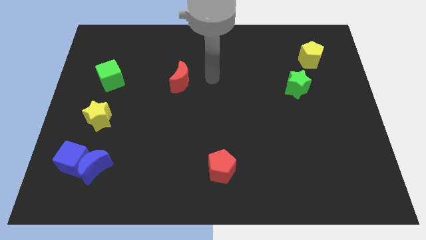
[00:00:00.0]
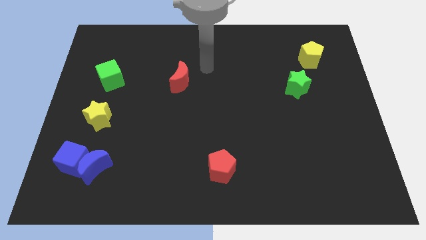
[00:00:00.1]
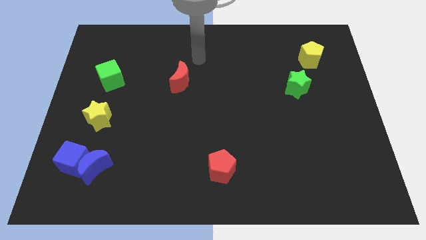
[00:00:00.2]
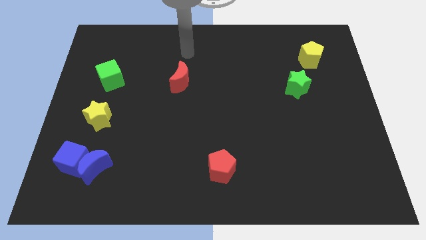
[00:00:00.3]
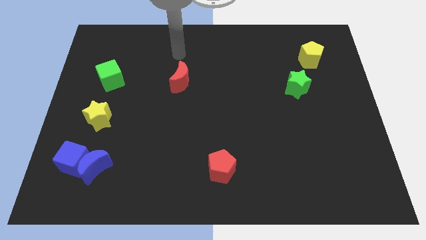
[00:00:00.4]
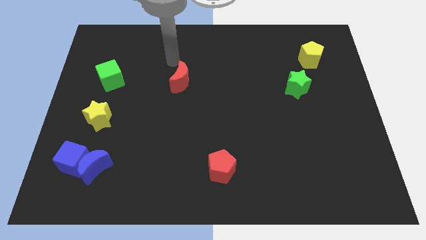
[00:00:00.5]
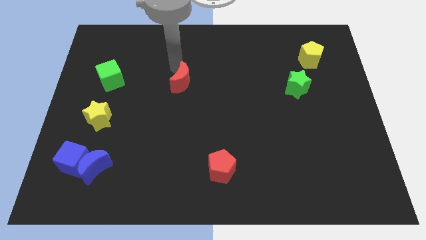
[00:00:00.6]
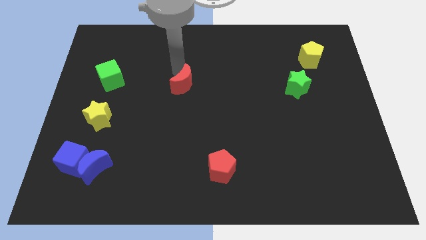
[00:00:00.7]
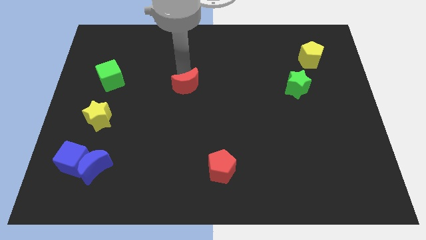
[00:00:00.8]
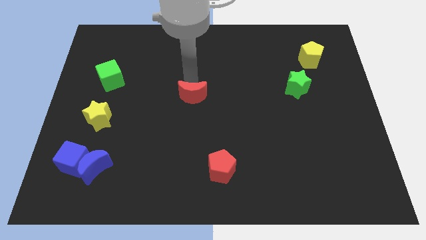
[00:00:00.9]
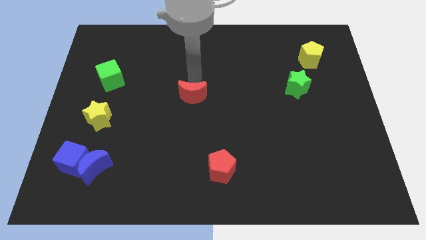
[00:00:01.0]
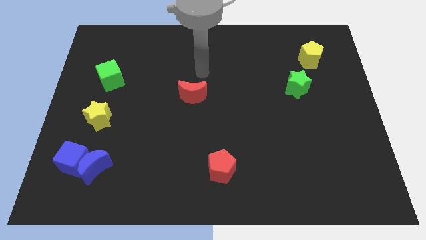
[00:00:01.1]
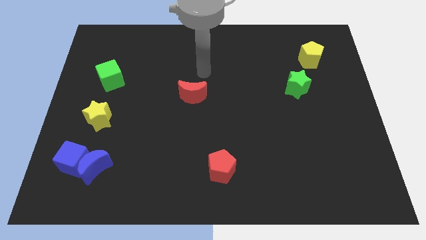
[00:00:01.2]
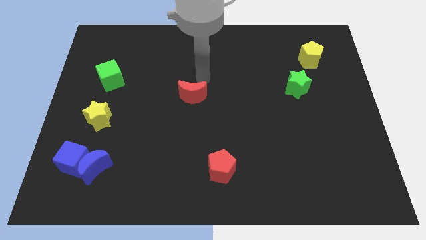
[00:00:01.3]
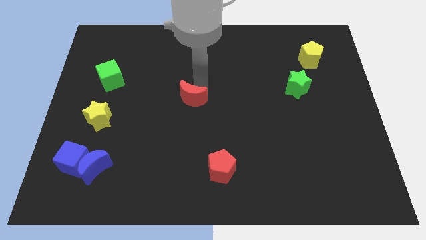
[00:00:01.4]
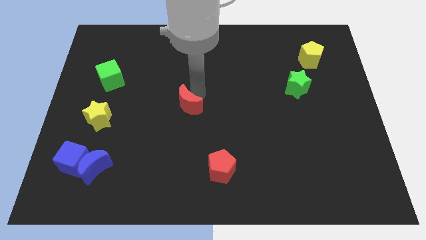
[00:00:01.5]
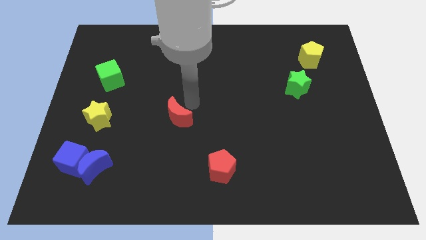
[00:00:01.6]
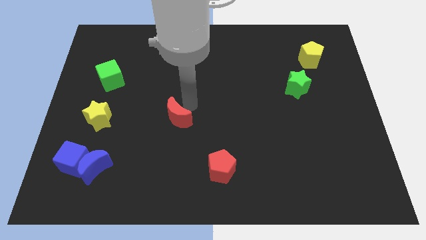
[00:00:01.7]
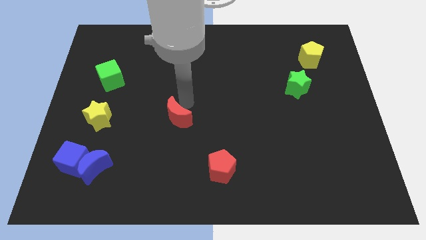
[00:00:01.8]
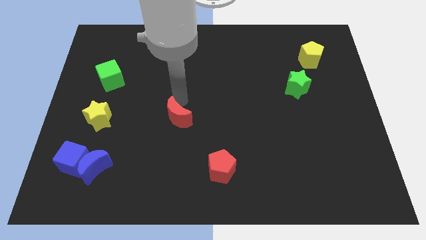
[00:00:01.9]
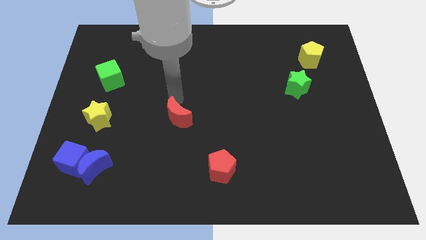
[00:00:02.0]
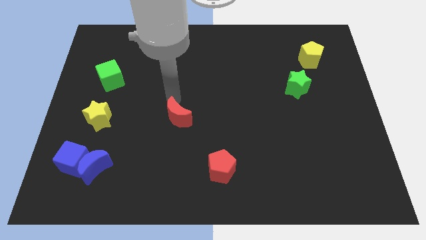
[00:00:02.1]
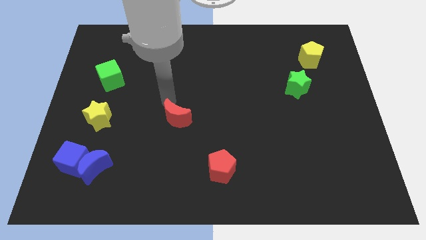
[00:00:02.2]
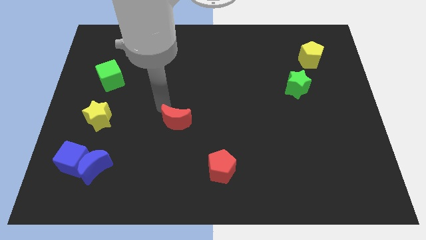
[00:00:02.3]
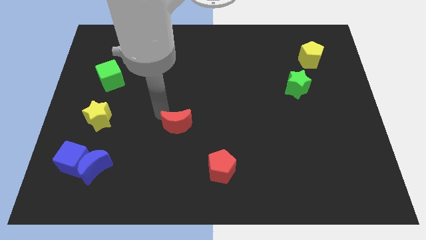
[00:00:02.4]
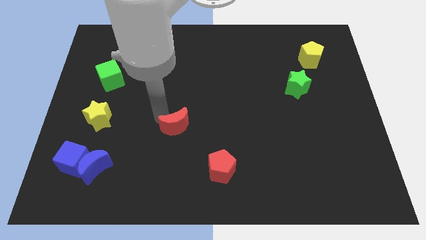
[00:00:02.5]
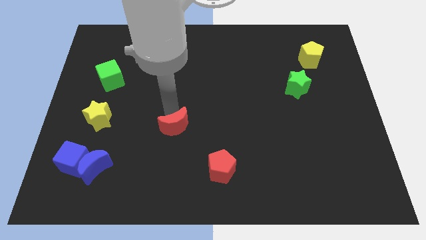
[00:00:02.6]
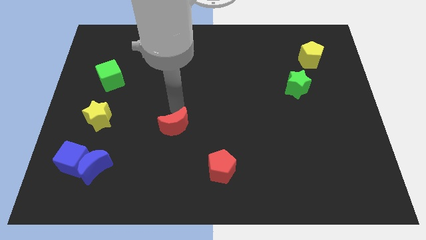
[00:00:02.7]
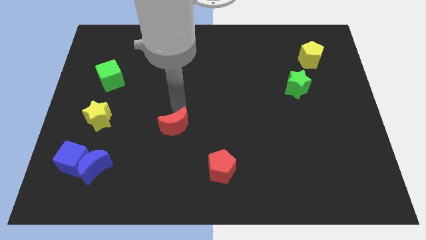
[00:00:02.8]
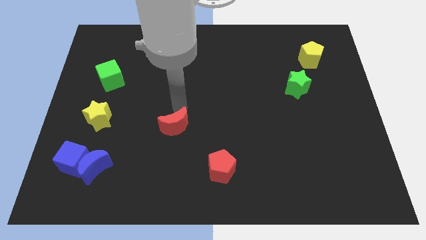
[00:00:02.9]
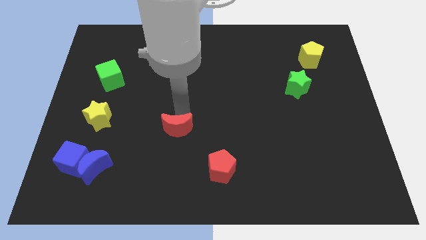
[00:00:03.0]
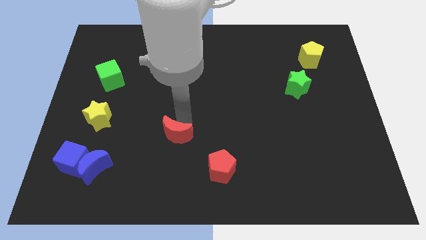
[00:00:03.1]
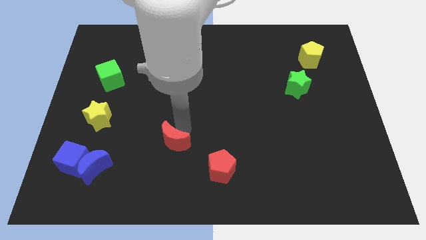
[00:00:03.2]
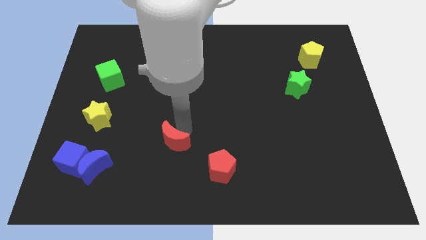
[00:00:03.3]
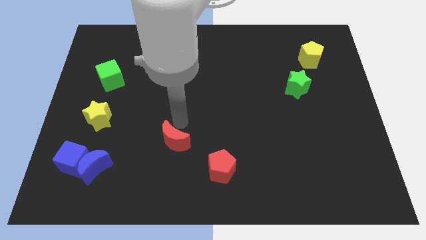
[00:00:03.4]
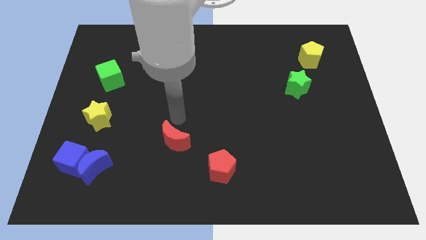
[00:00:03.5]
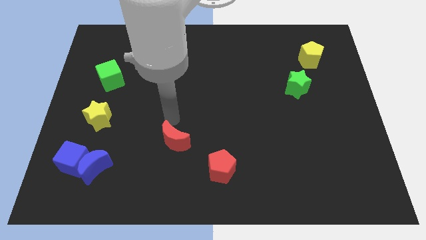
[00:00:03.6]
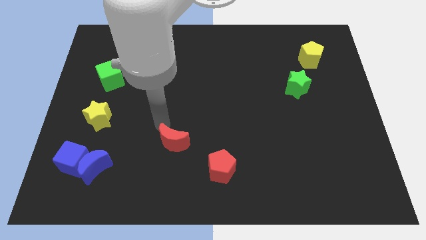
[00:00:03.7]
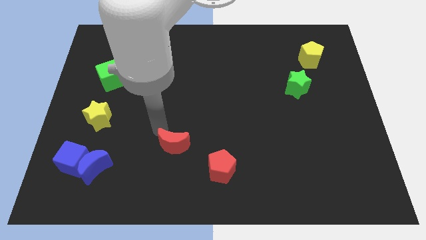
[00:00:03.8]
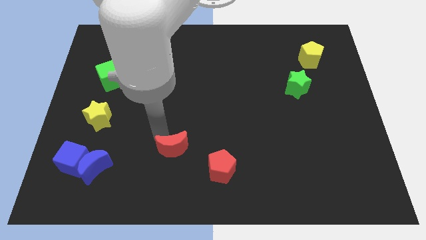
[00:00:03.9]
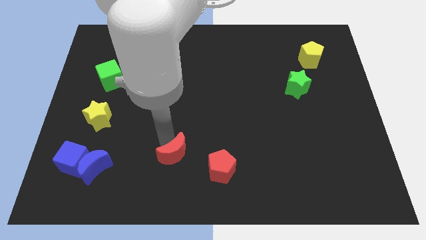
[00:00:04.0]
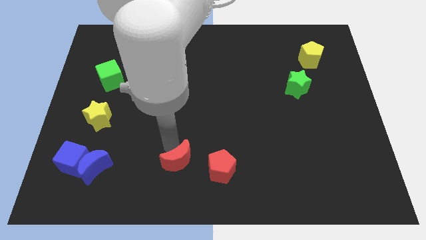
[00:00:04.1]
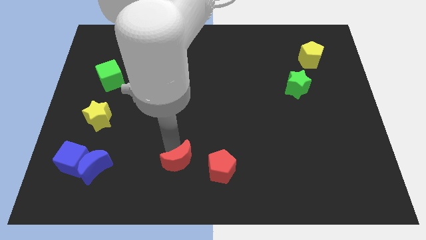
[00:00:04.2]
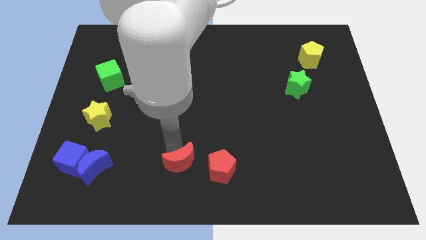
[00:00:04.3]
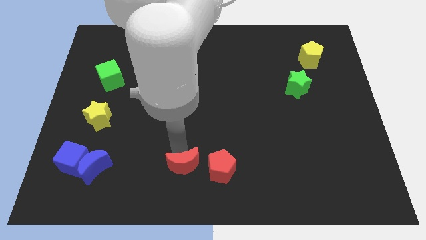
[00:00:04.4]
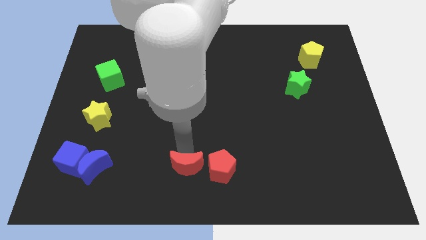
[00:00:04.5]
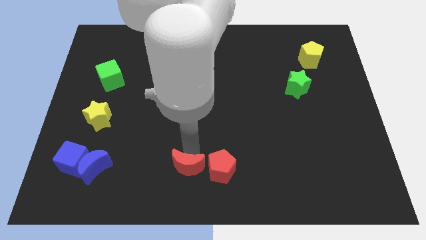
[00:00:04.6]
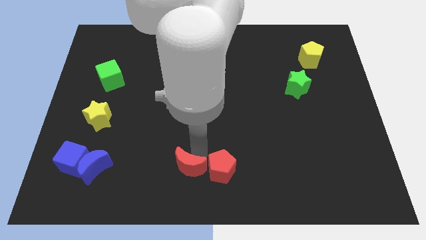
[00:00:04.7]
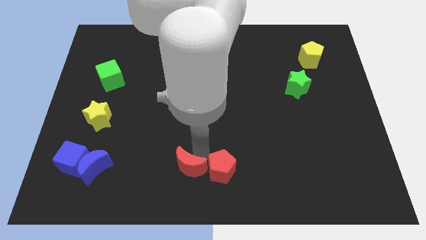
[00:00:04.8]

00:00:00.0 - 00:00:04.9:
slide the red moon horizontally left of the red pentagon

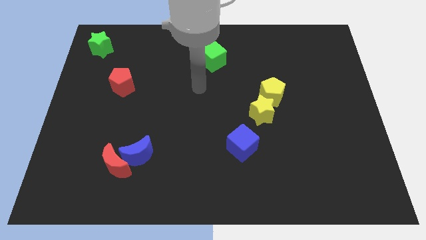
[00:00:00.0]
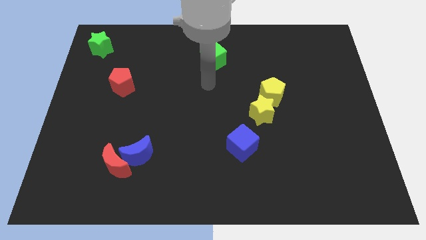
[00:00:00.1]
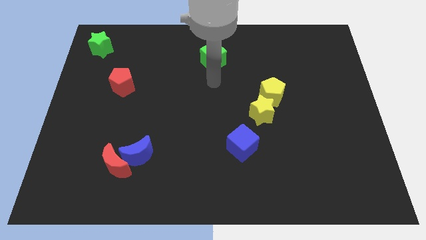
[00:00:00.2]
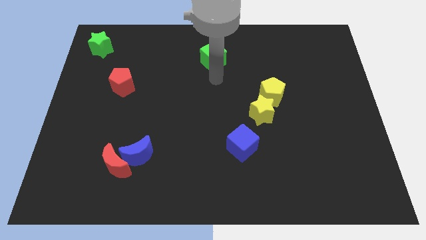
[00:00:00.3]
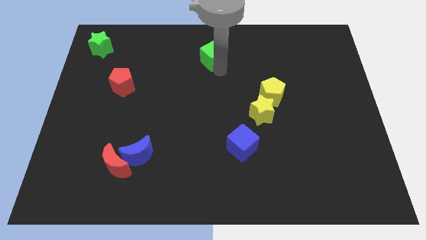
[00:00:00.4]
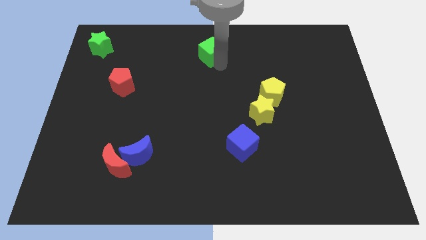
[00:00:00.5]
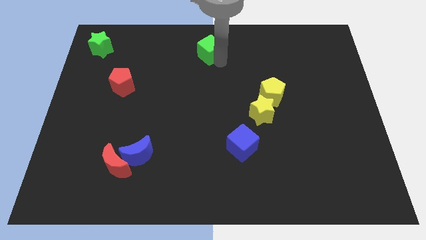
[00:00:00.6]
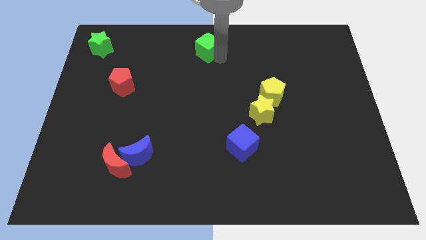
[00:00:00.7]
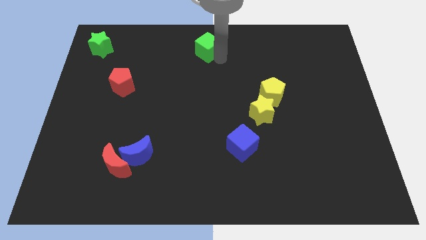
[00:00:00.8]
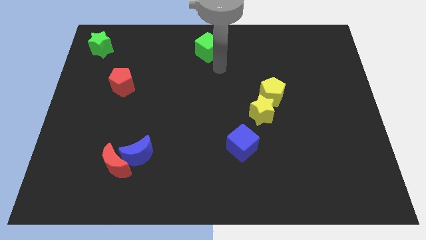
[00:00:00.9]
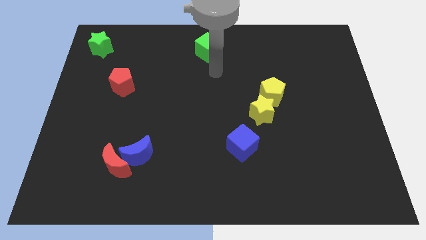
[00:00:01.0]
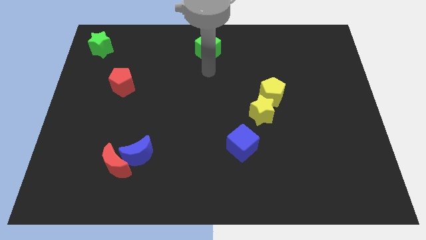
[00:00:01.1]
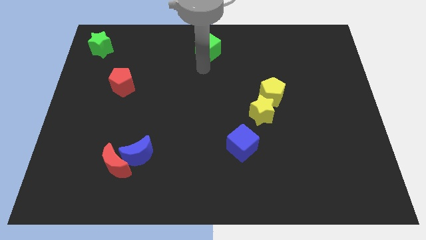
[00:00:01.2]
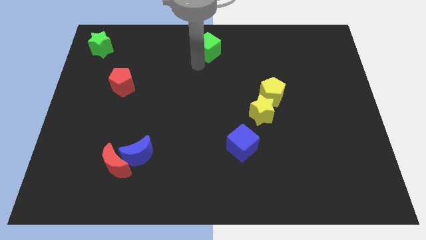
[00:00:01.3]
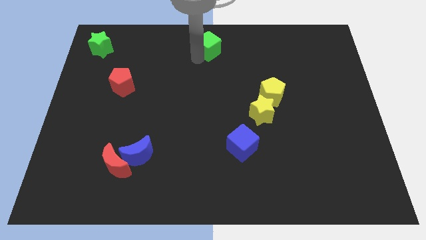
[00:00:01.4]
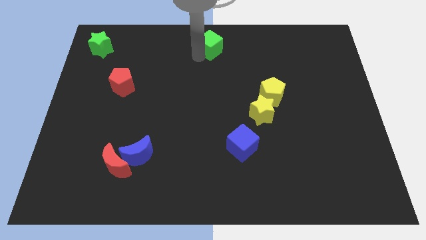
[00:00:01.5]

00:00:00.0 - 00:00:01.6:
move the green cube to the top side

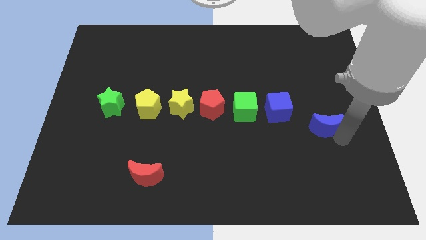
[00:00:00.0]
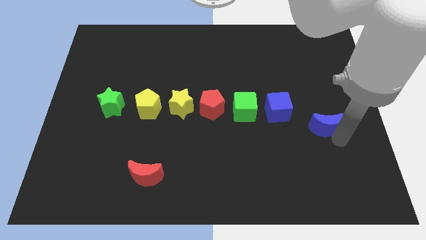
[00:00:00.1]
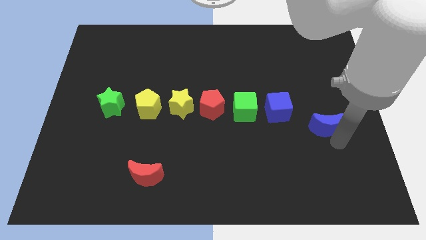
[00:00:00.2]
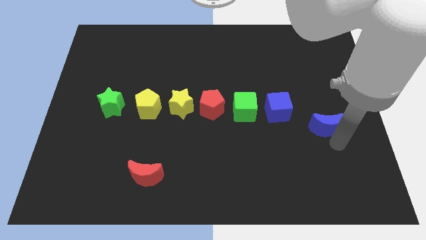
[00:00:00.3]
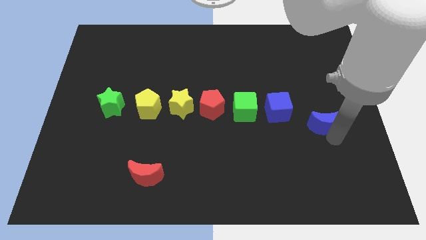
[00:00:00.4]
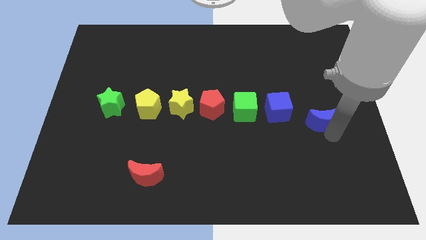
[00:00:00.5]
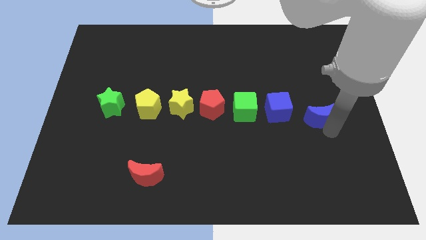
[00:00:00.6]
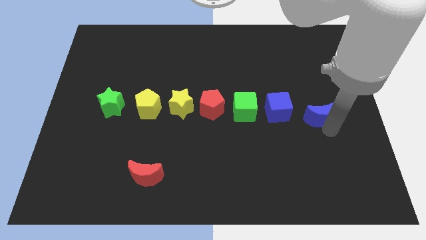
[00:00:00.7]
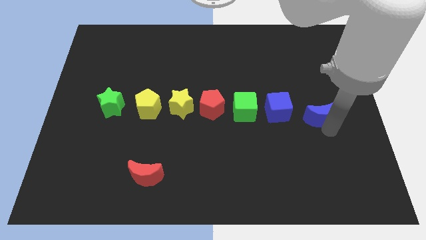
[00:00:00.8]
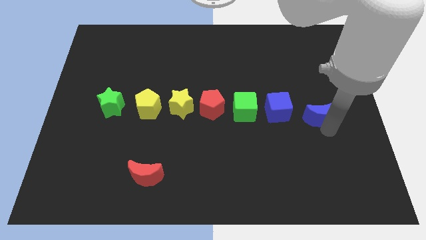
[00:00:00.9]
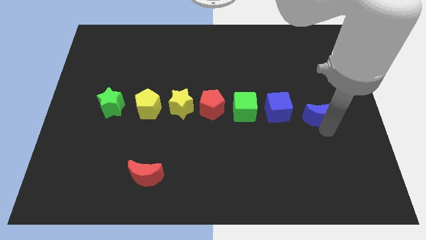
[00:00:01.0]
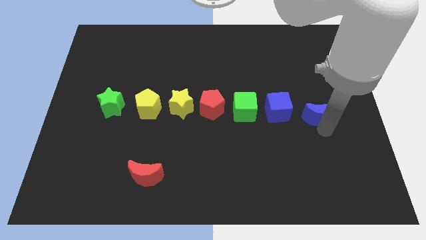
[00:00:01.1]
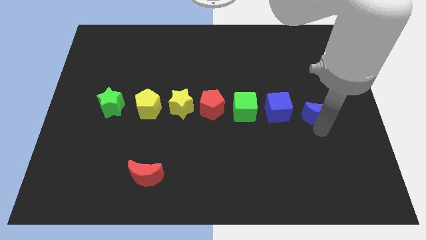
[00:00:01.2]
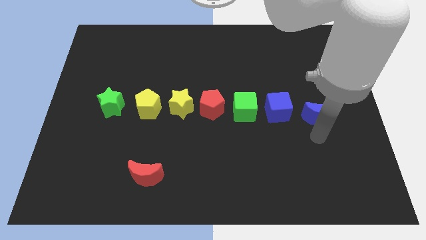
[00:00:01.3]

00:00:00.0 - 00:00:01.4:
move blue moon beside blue cube

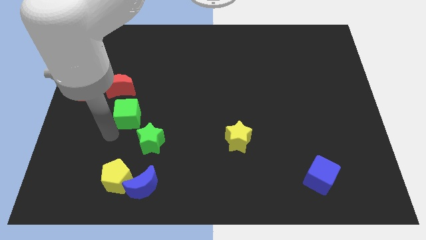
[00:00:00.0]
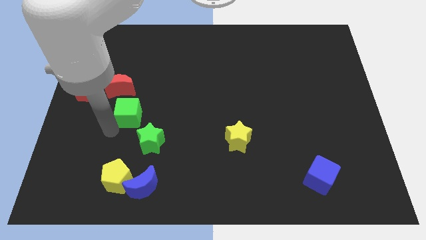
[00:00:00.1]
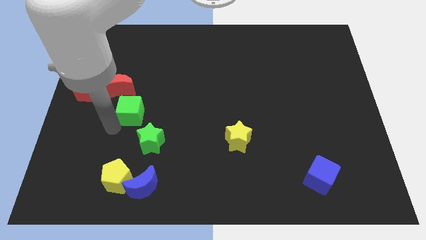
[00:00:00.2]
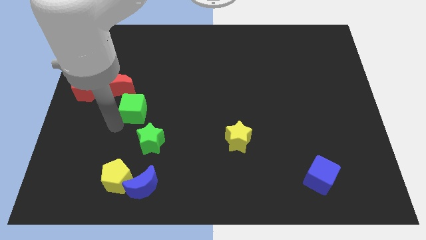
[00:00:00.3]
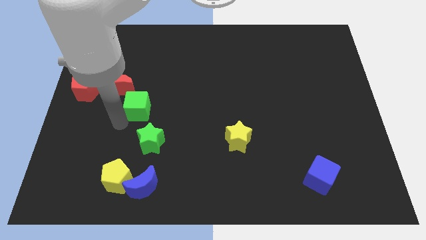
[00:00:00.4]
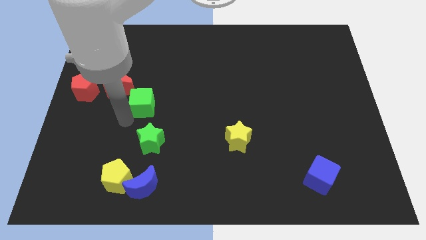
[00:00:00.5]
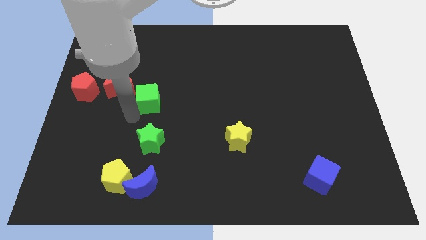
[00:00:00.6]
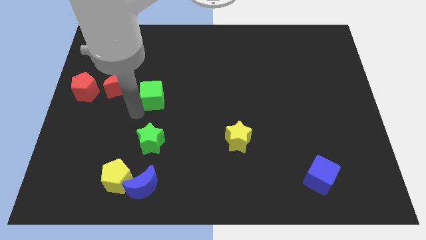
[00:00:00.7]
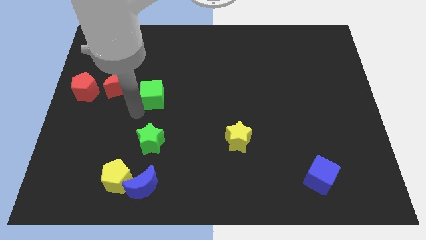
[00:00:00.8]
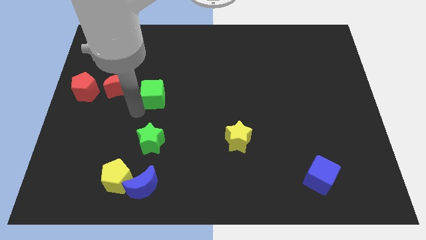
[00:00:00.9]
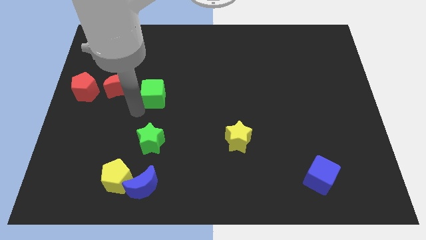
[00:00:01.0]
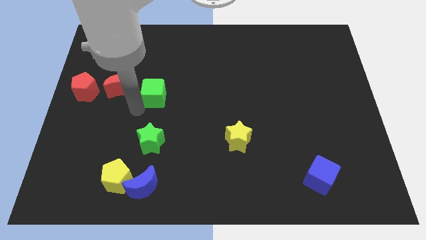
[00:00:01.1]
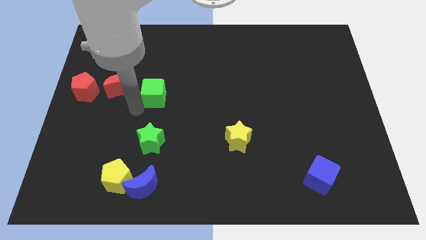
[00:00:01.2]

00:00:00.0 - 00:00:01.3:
move the green cube to the right of the red crescent
